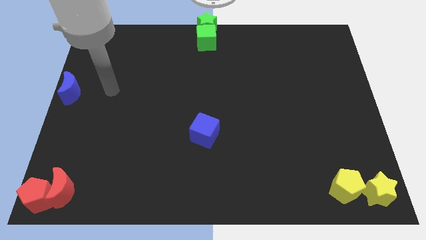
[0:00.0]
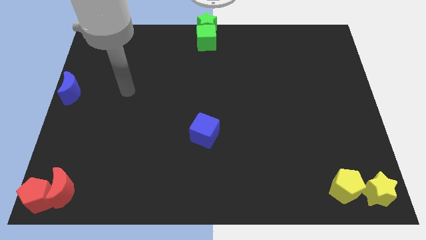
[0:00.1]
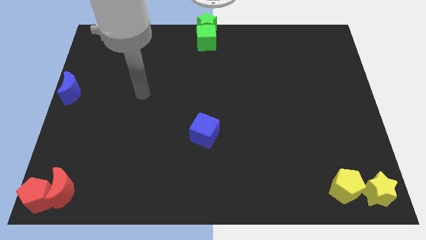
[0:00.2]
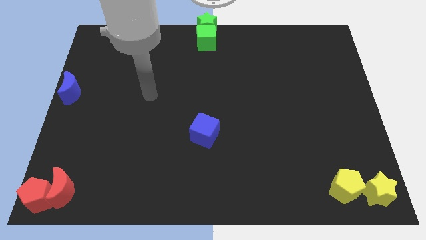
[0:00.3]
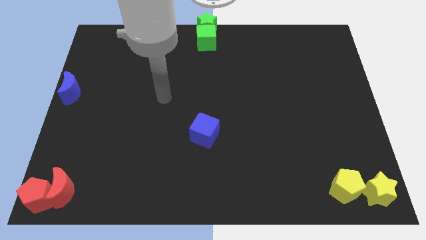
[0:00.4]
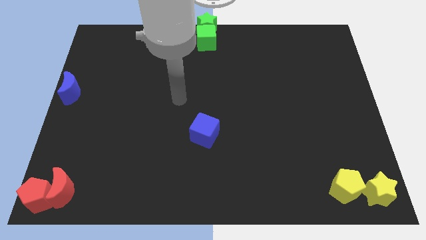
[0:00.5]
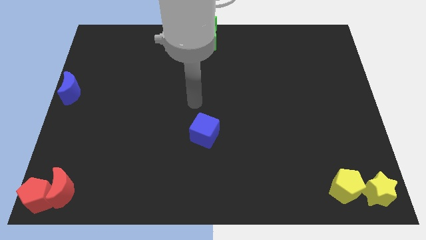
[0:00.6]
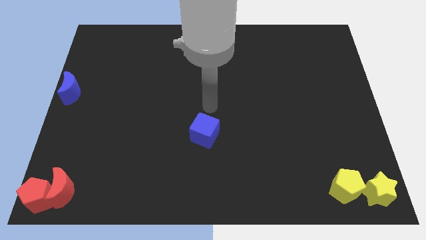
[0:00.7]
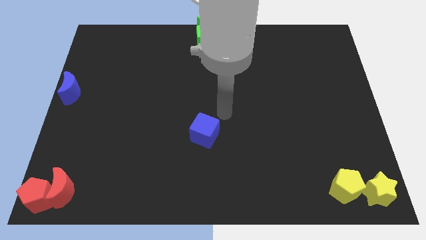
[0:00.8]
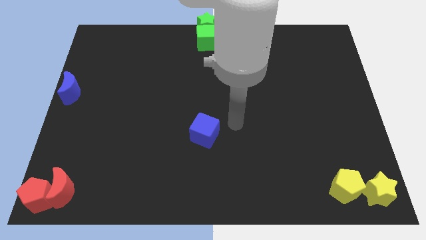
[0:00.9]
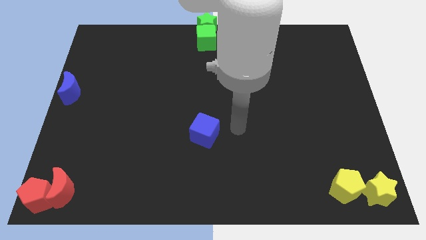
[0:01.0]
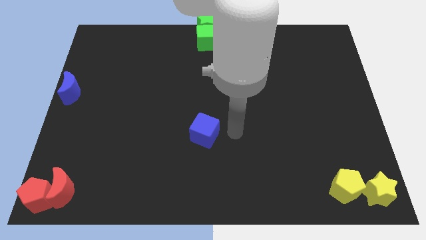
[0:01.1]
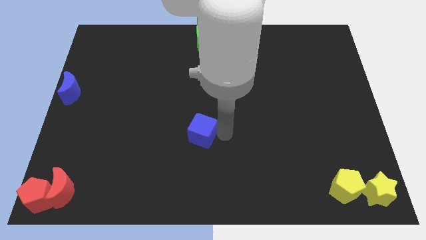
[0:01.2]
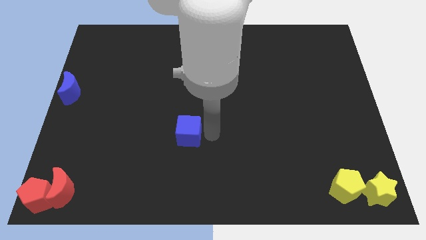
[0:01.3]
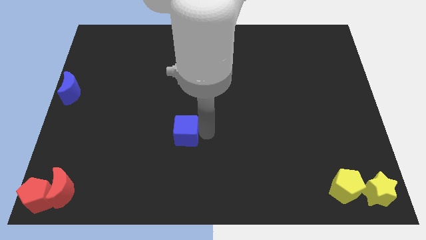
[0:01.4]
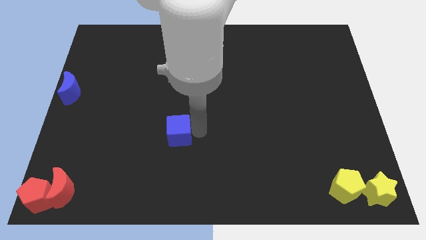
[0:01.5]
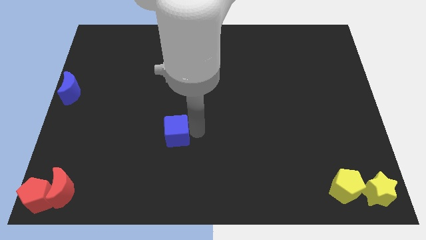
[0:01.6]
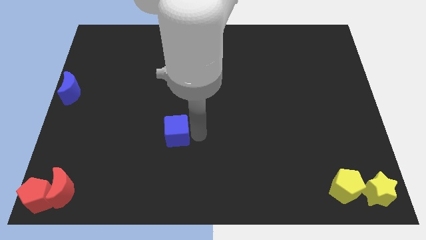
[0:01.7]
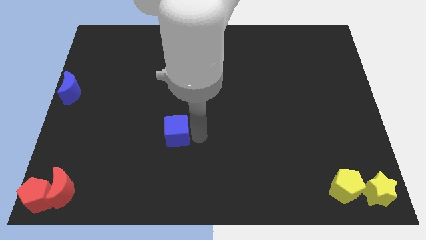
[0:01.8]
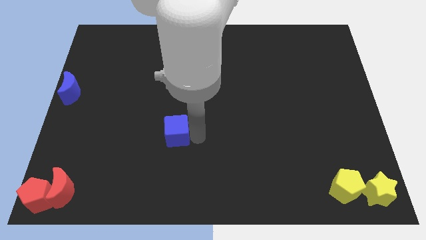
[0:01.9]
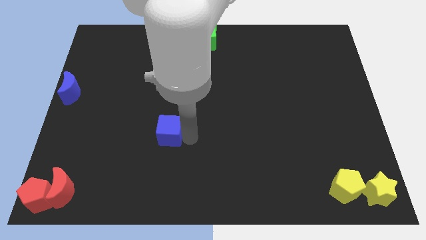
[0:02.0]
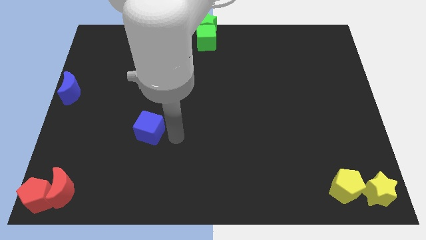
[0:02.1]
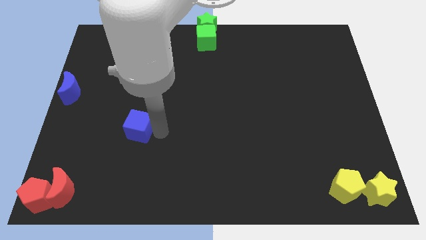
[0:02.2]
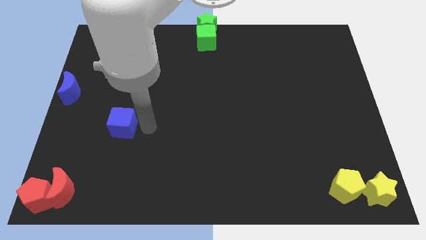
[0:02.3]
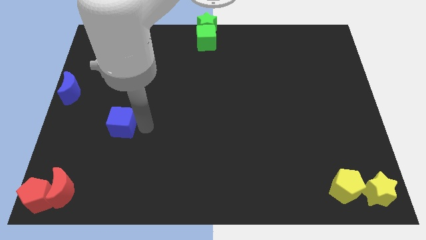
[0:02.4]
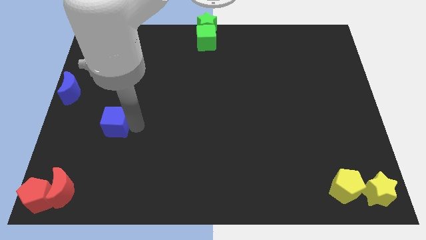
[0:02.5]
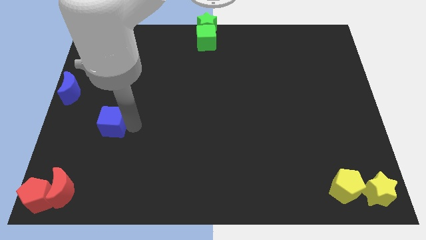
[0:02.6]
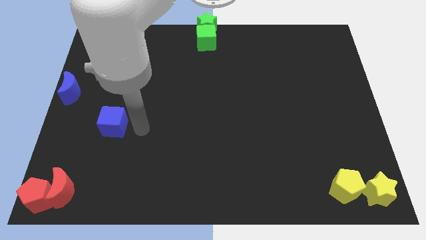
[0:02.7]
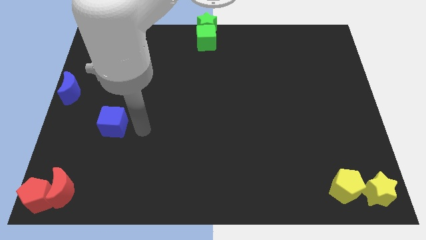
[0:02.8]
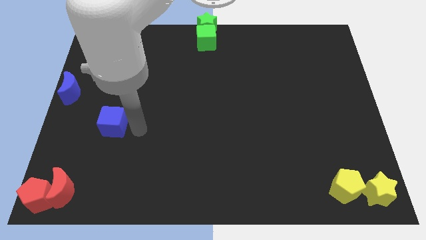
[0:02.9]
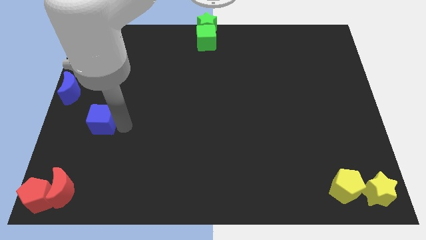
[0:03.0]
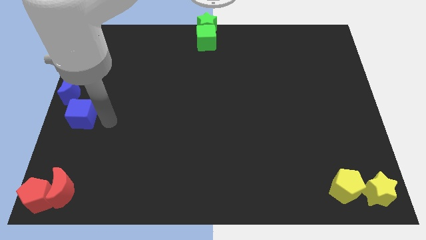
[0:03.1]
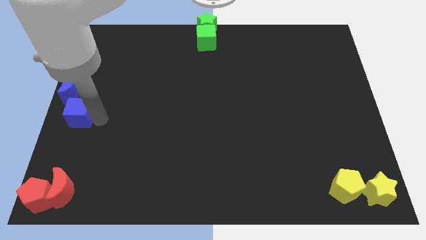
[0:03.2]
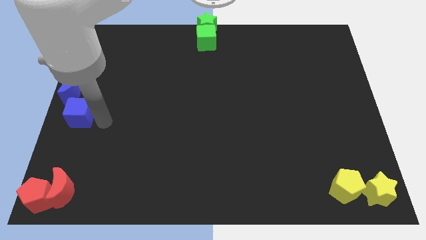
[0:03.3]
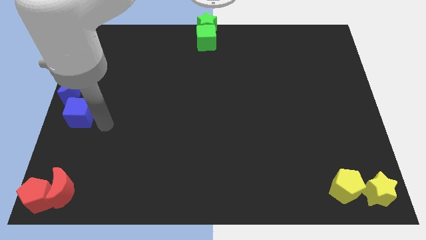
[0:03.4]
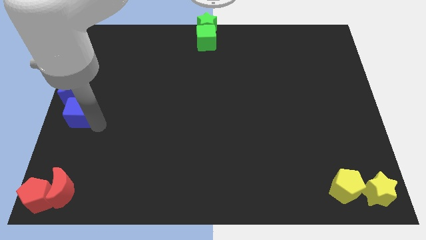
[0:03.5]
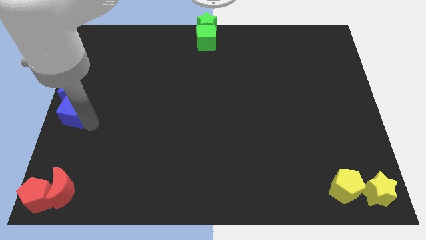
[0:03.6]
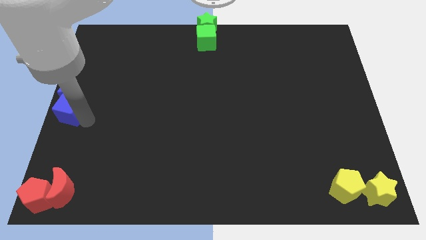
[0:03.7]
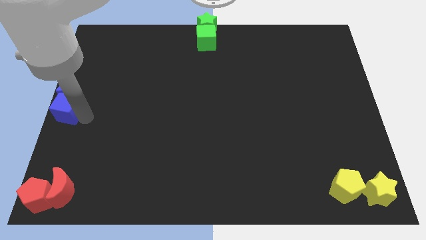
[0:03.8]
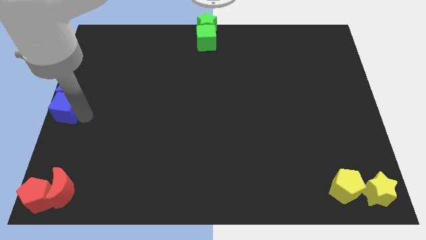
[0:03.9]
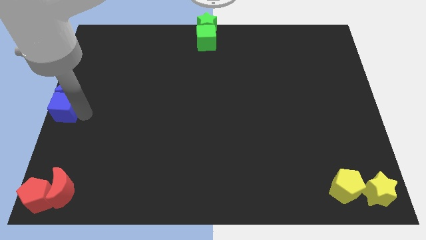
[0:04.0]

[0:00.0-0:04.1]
bring the blue cube into the bottom side of the blue crescent

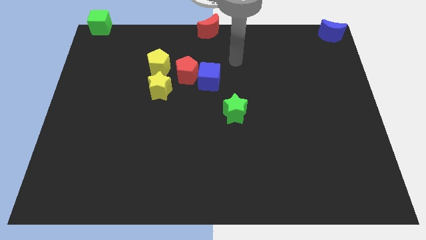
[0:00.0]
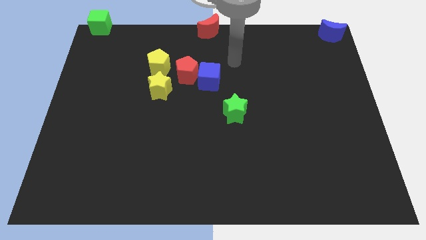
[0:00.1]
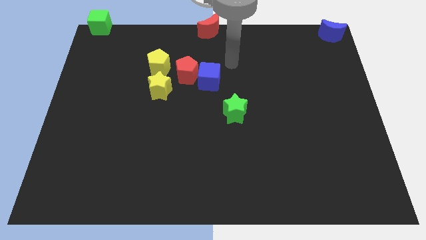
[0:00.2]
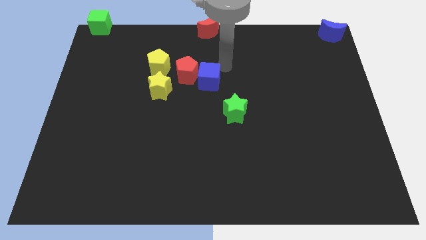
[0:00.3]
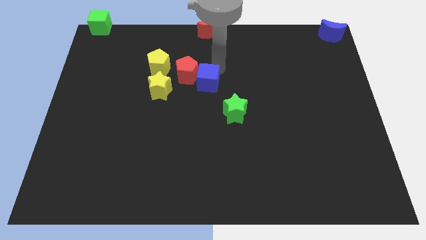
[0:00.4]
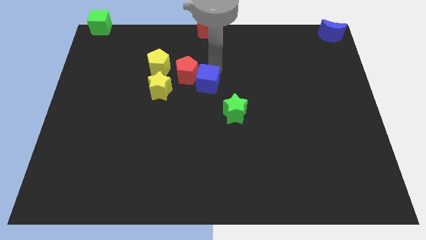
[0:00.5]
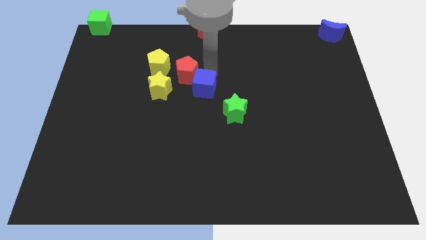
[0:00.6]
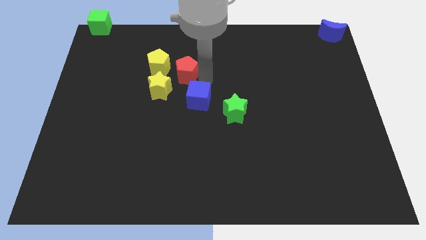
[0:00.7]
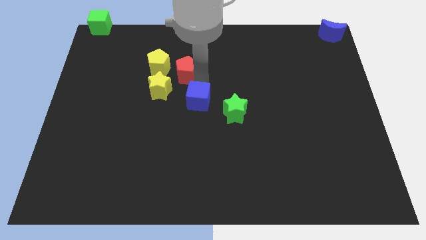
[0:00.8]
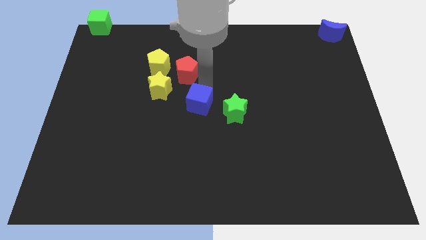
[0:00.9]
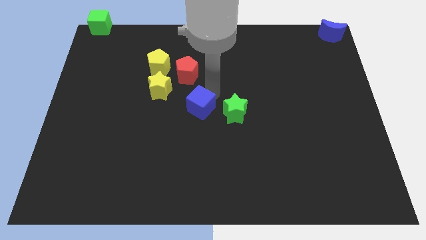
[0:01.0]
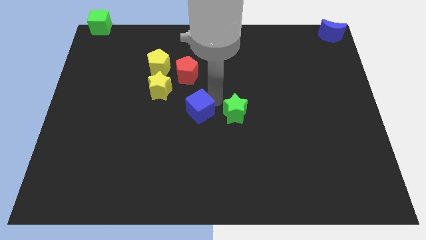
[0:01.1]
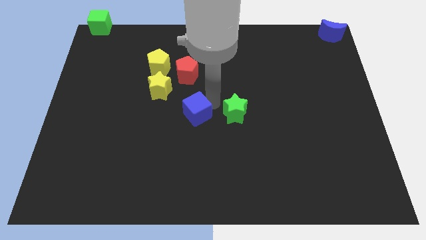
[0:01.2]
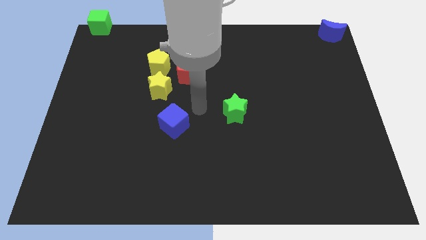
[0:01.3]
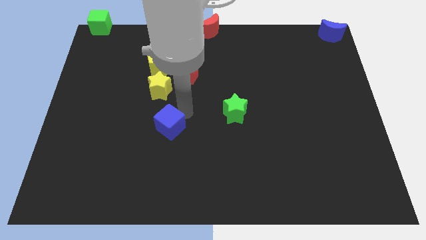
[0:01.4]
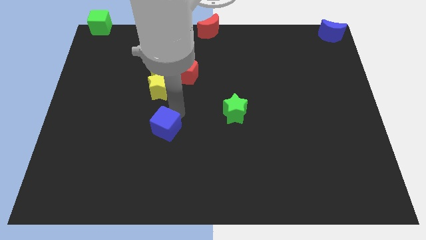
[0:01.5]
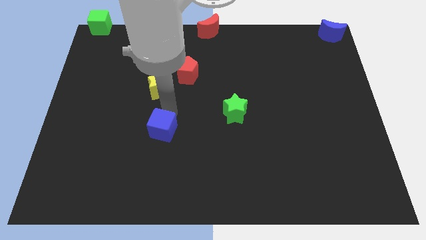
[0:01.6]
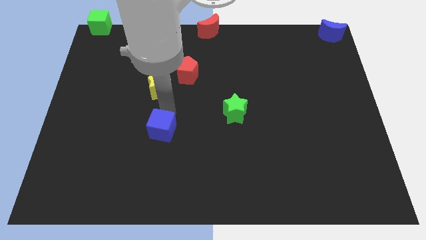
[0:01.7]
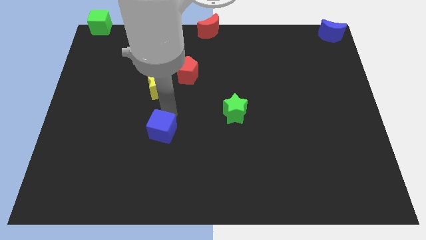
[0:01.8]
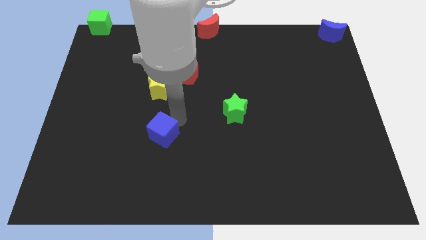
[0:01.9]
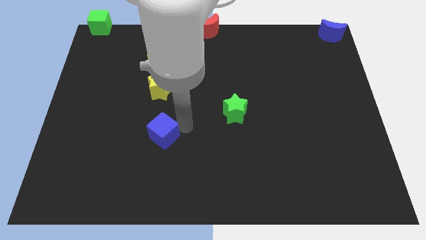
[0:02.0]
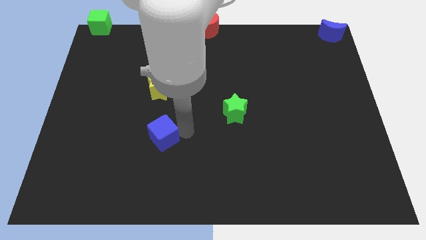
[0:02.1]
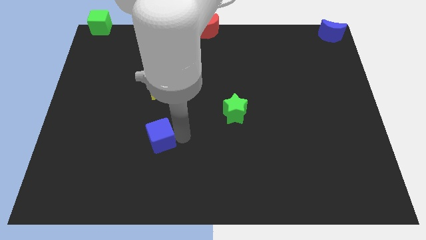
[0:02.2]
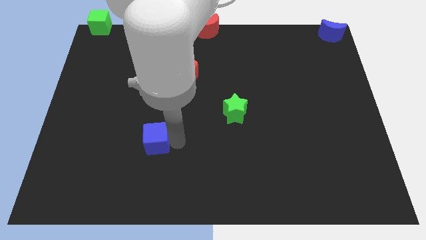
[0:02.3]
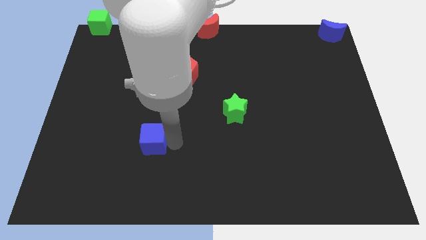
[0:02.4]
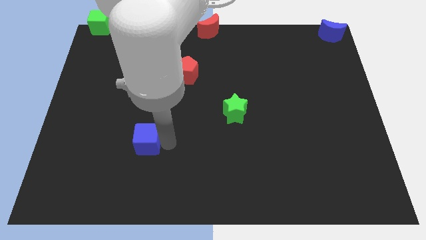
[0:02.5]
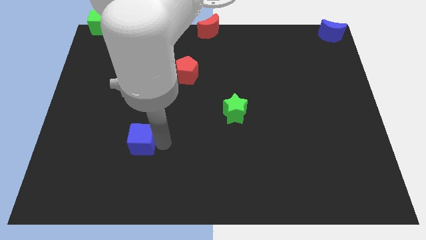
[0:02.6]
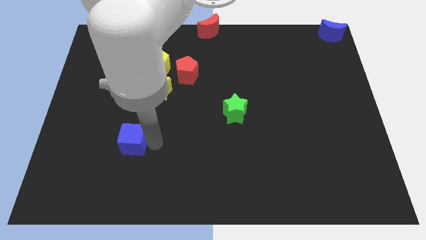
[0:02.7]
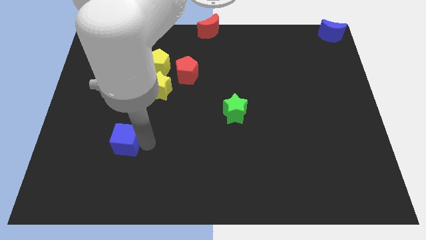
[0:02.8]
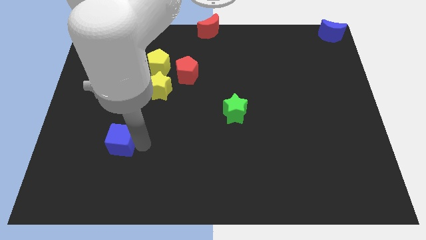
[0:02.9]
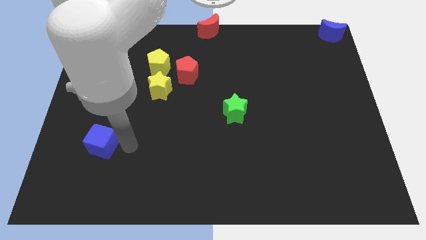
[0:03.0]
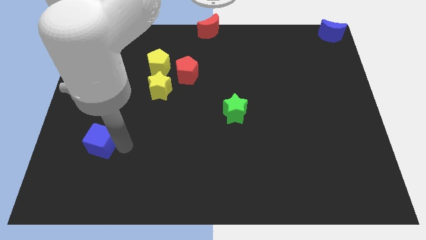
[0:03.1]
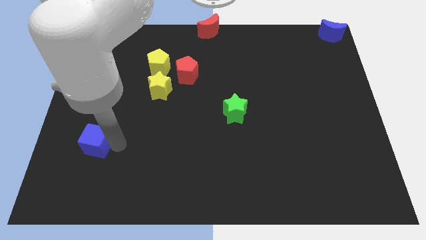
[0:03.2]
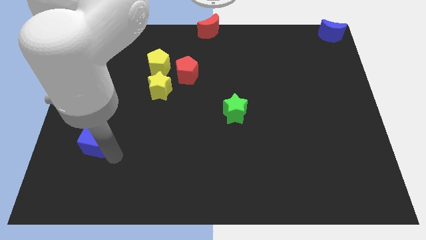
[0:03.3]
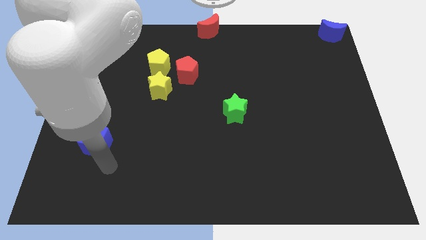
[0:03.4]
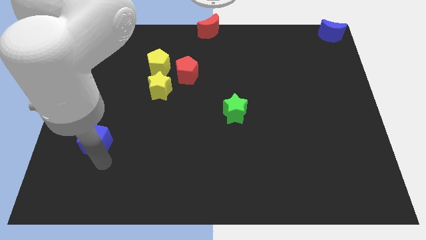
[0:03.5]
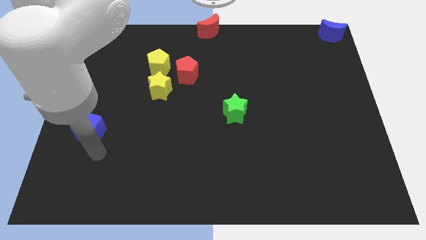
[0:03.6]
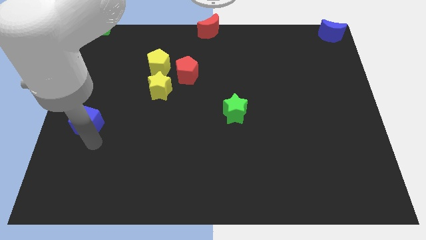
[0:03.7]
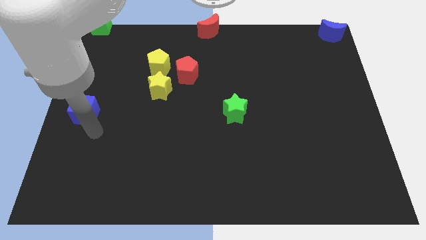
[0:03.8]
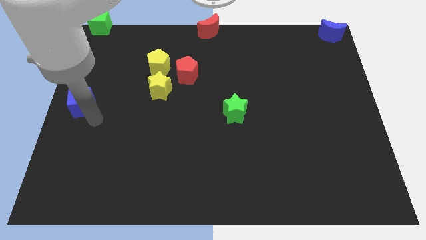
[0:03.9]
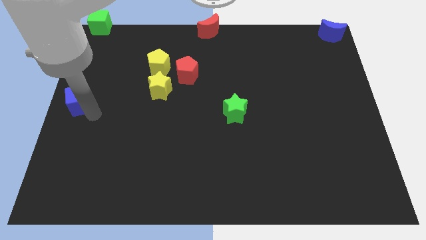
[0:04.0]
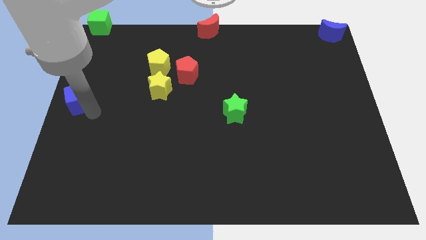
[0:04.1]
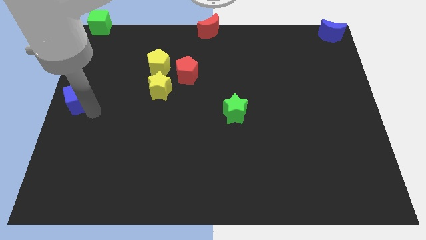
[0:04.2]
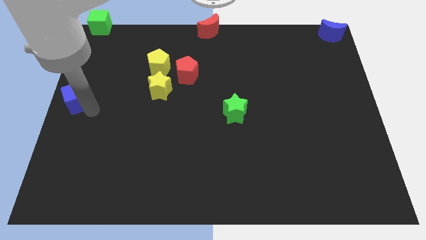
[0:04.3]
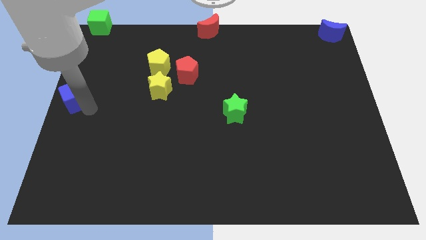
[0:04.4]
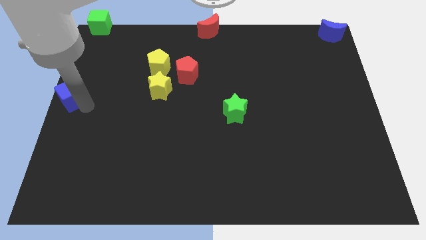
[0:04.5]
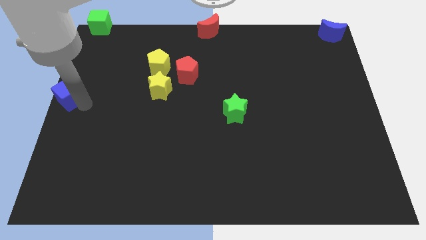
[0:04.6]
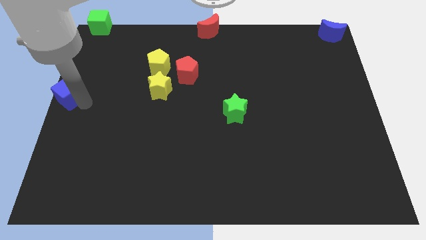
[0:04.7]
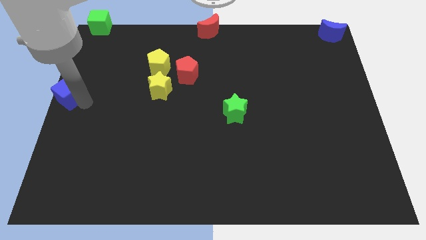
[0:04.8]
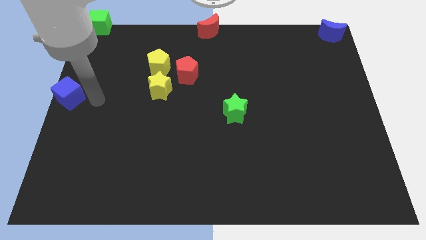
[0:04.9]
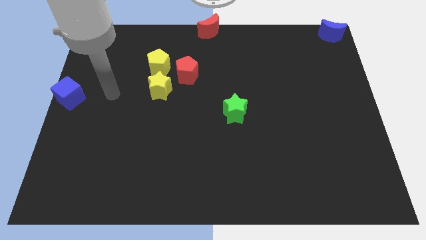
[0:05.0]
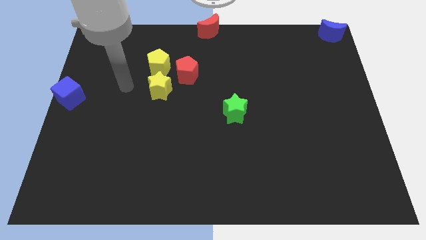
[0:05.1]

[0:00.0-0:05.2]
place the blue cube at the left center of the board
